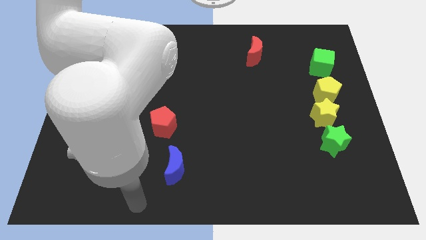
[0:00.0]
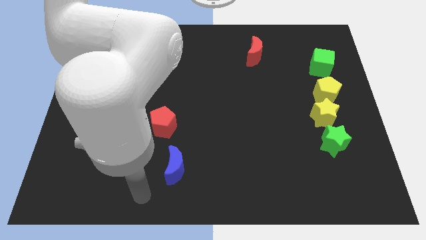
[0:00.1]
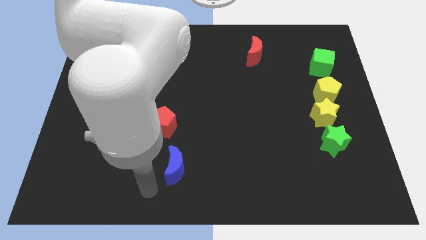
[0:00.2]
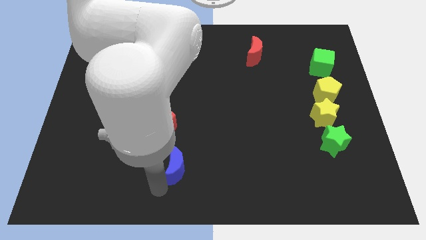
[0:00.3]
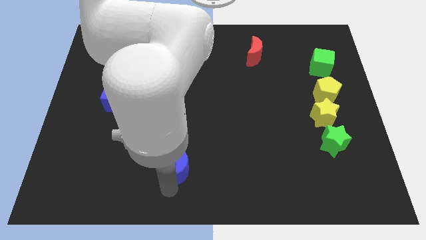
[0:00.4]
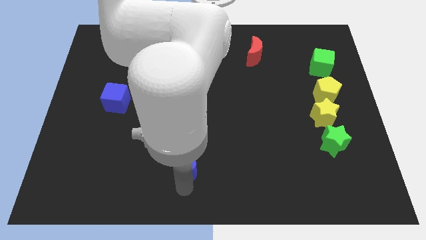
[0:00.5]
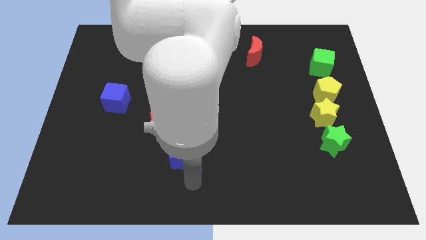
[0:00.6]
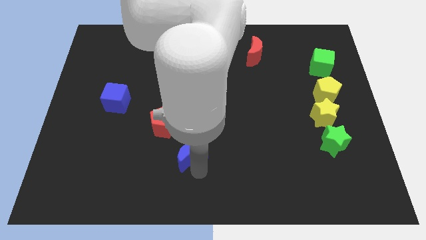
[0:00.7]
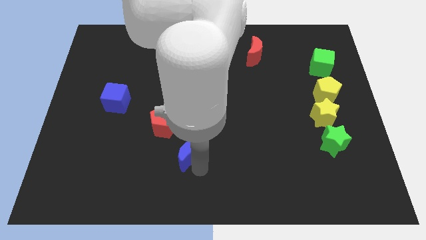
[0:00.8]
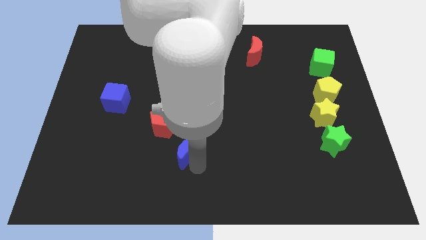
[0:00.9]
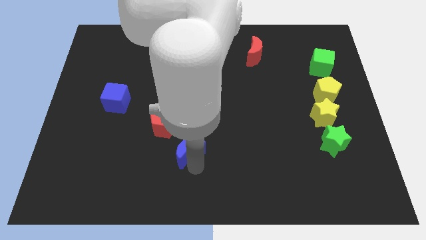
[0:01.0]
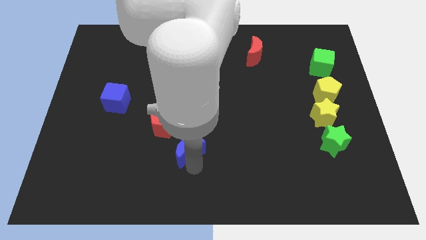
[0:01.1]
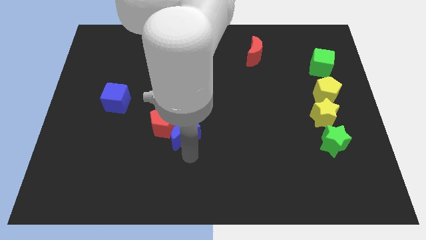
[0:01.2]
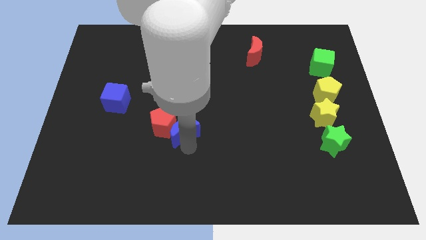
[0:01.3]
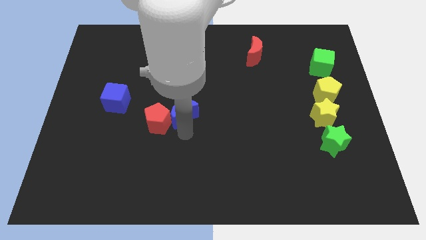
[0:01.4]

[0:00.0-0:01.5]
place the blue crescent at the right of the red pentagon

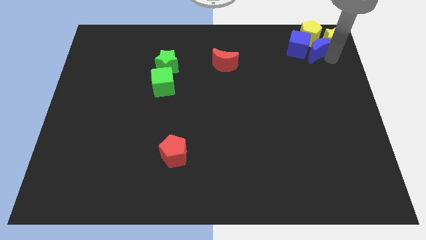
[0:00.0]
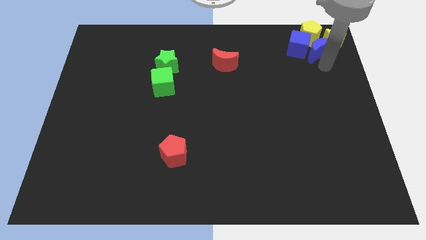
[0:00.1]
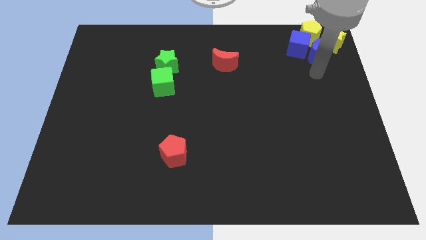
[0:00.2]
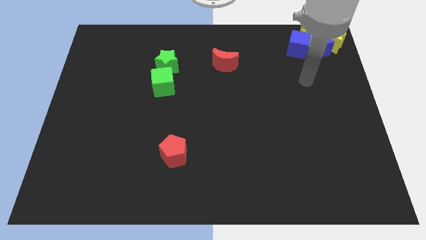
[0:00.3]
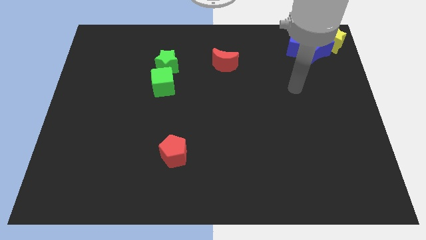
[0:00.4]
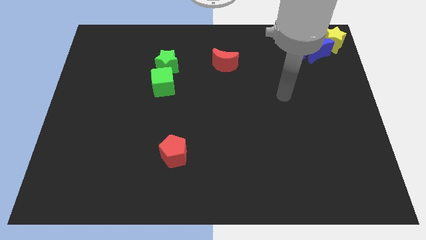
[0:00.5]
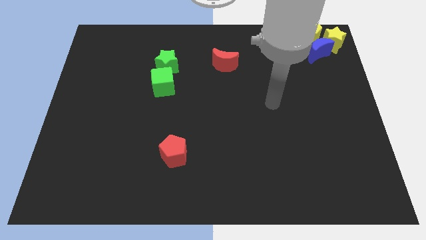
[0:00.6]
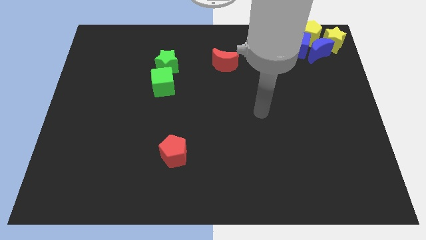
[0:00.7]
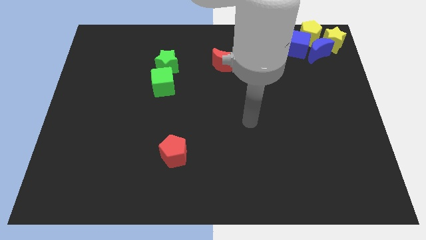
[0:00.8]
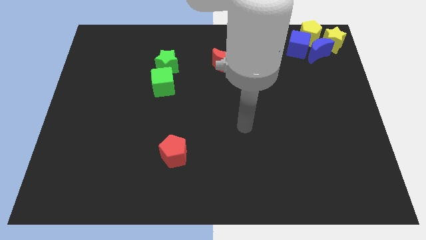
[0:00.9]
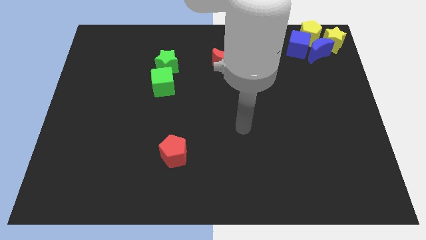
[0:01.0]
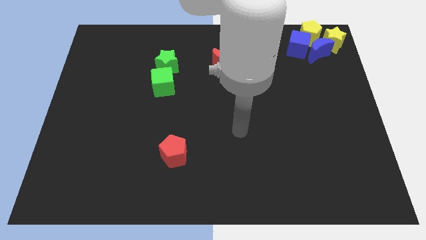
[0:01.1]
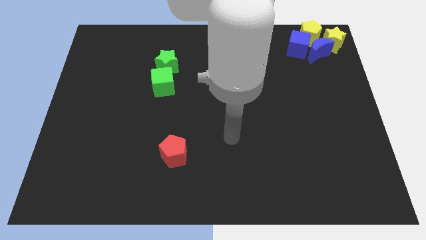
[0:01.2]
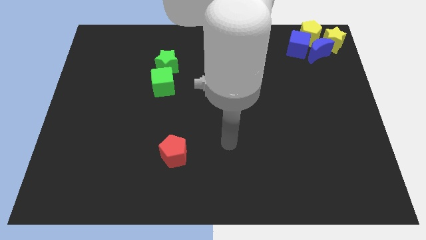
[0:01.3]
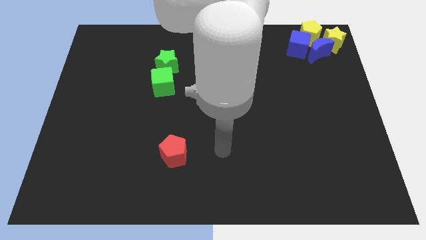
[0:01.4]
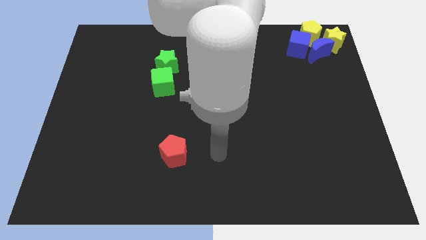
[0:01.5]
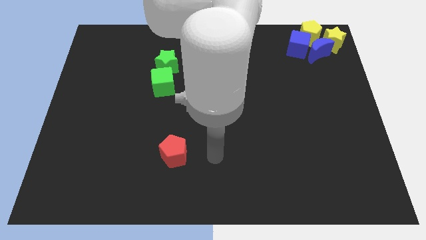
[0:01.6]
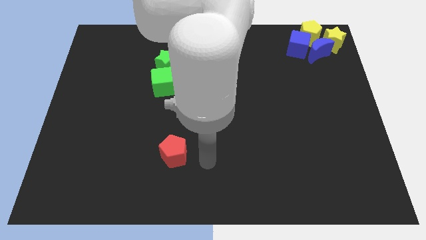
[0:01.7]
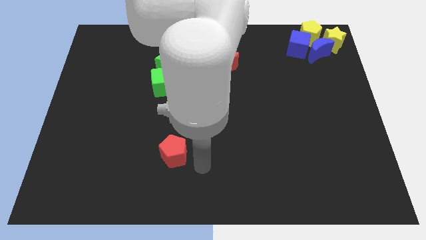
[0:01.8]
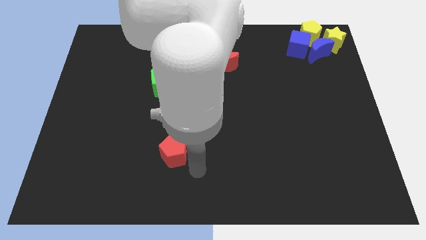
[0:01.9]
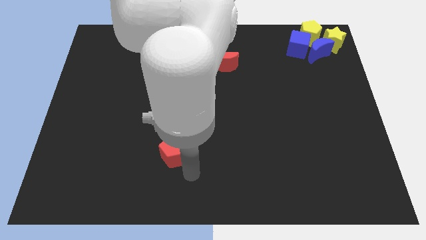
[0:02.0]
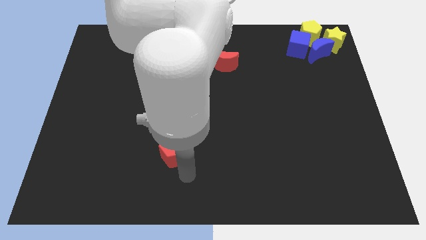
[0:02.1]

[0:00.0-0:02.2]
touch the bottom side of the red pentagon
